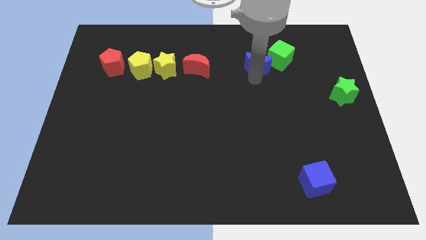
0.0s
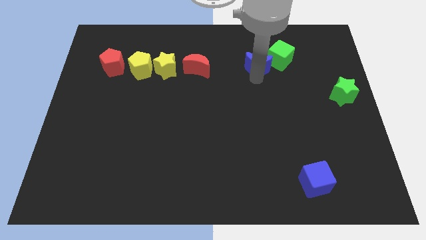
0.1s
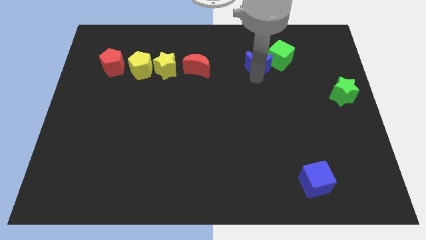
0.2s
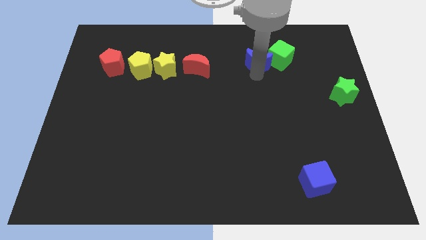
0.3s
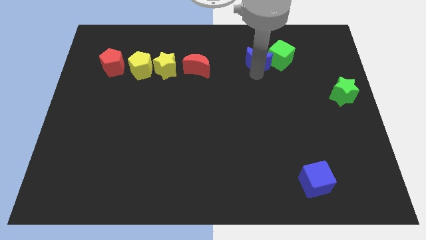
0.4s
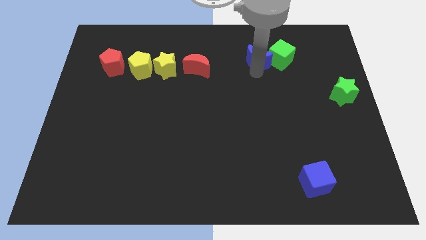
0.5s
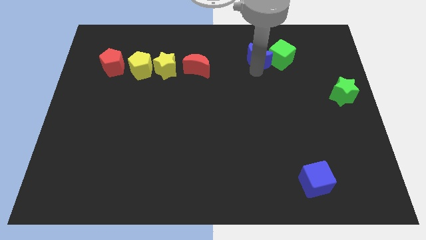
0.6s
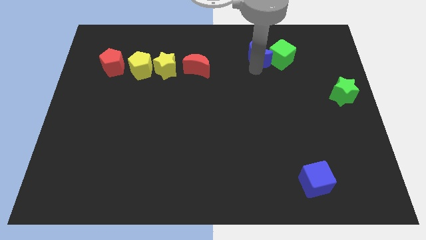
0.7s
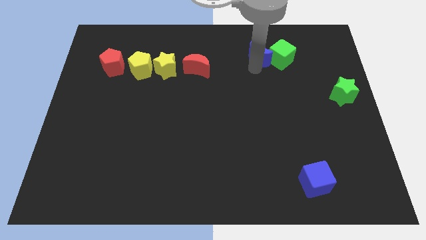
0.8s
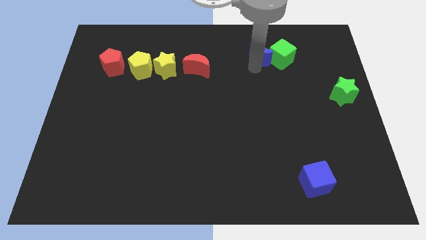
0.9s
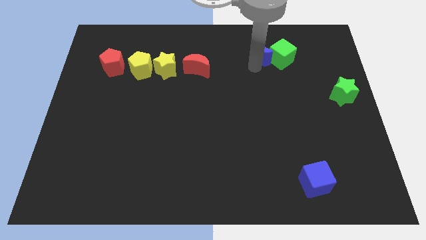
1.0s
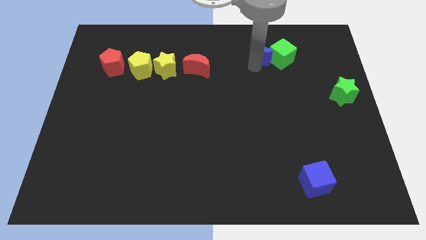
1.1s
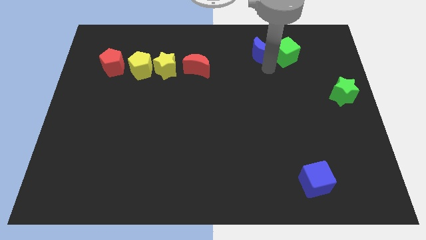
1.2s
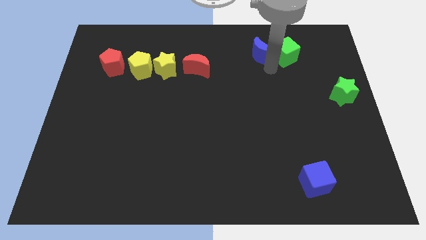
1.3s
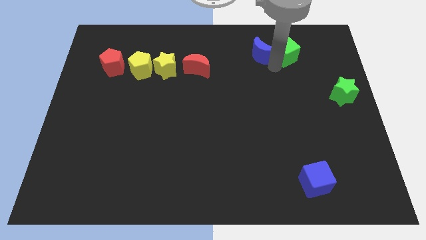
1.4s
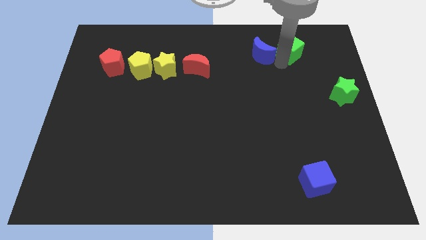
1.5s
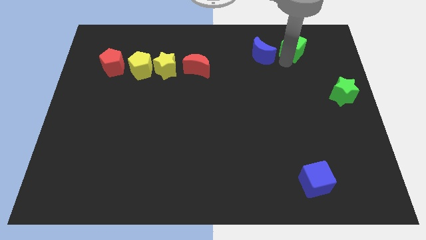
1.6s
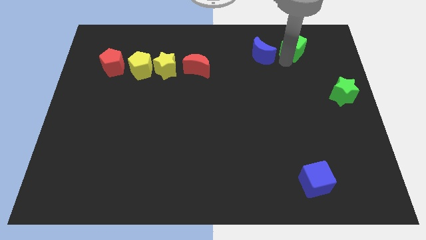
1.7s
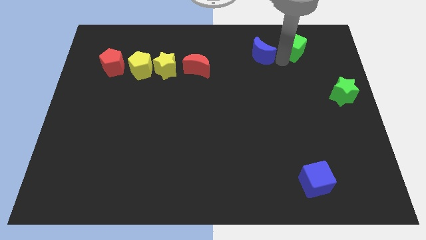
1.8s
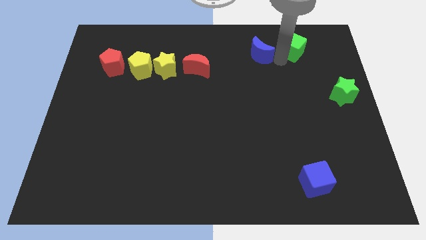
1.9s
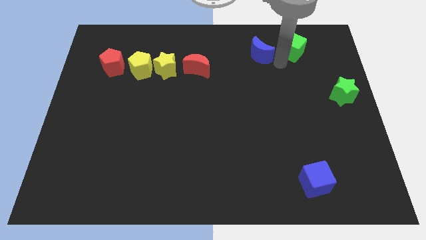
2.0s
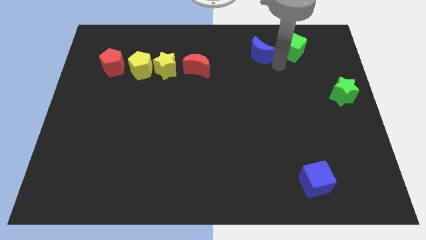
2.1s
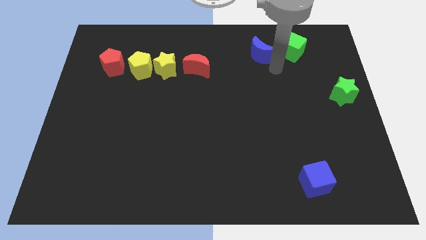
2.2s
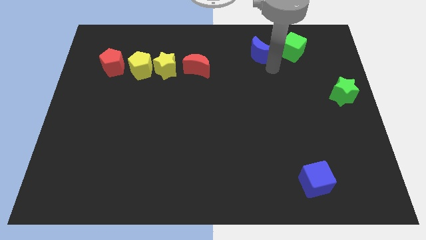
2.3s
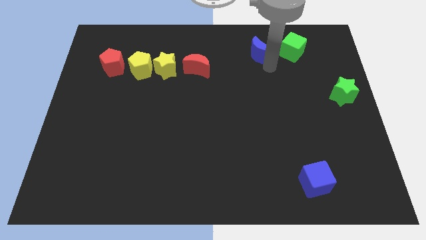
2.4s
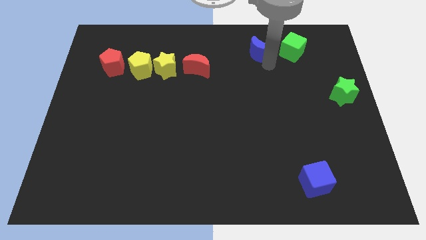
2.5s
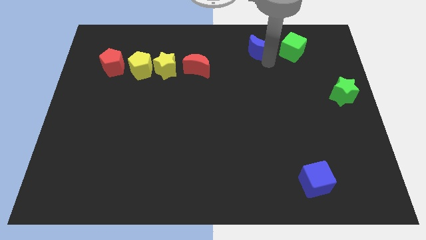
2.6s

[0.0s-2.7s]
separate blue crescent from green cube

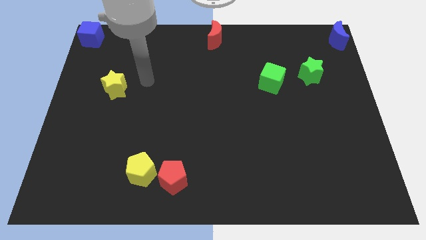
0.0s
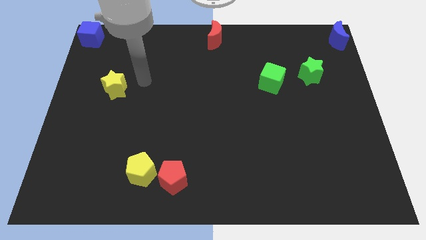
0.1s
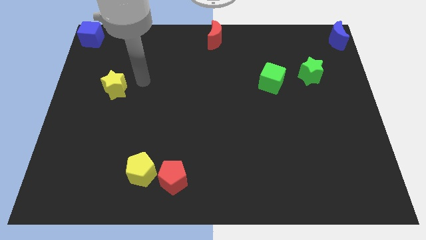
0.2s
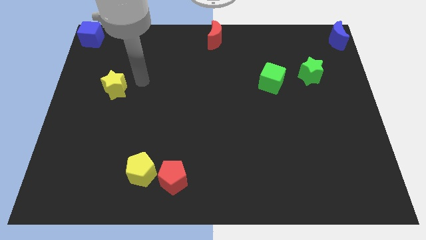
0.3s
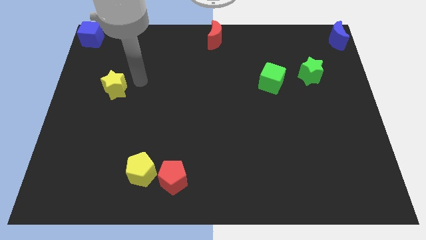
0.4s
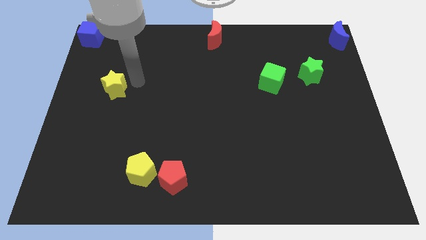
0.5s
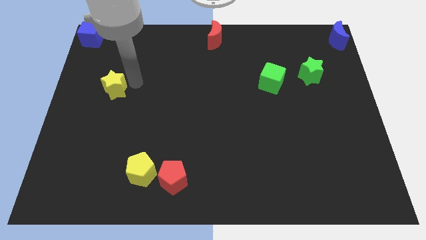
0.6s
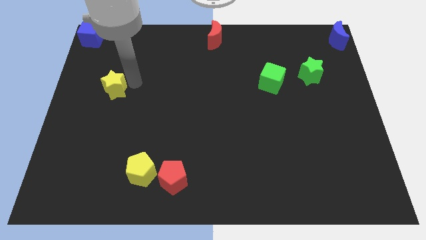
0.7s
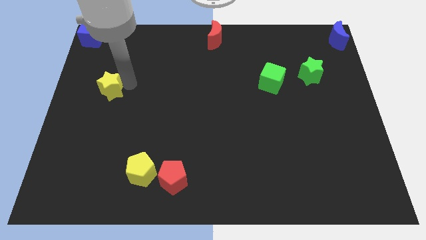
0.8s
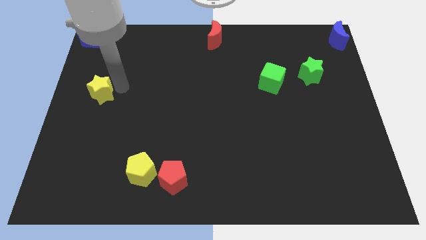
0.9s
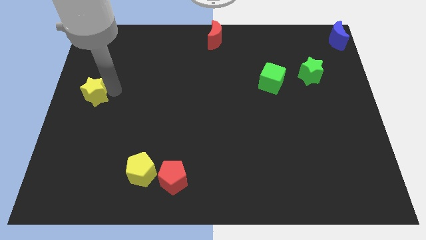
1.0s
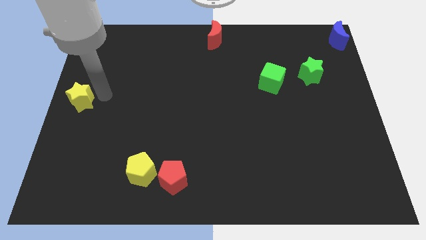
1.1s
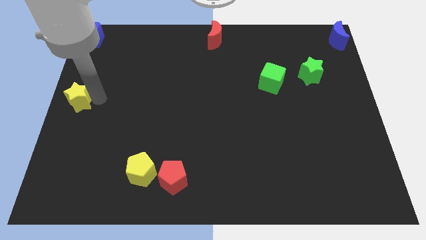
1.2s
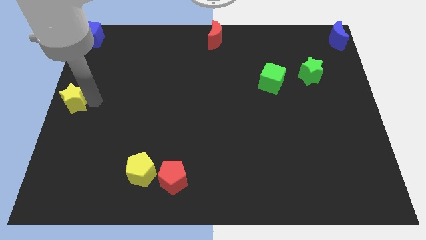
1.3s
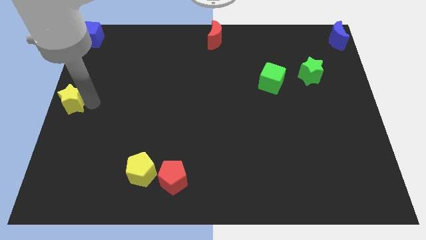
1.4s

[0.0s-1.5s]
place the yellow star to the center left side of the board

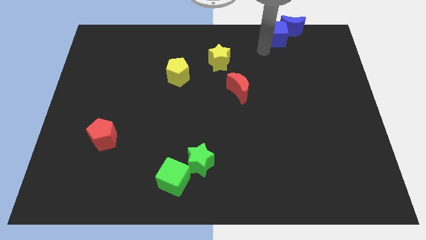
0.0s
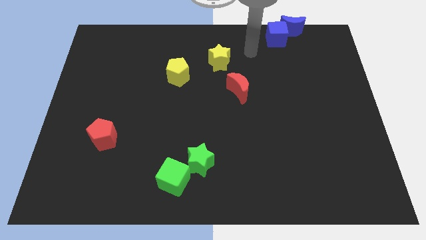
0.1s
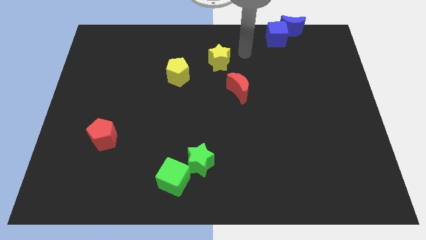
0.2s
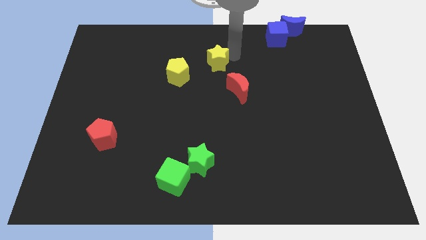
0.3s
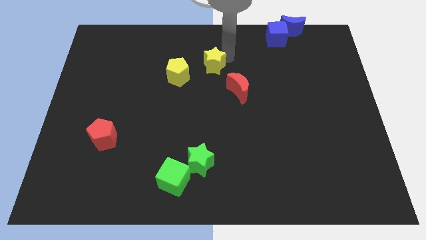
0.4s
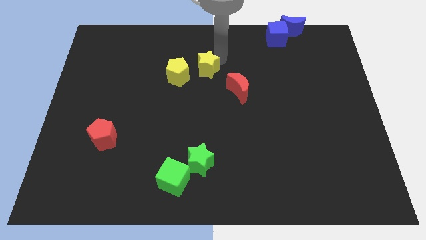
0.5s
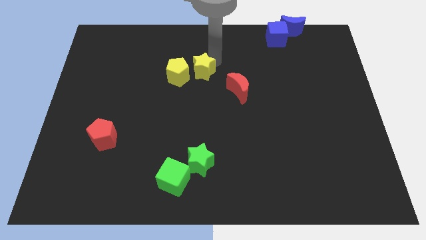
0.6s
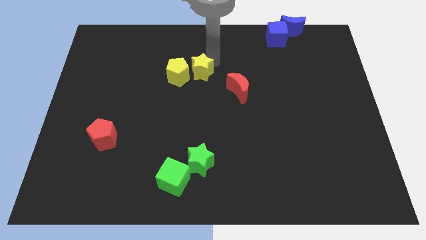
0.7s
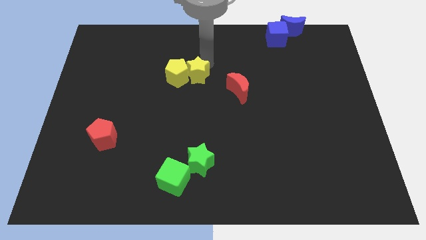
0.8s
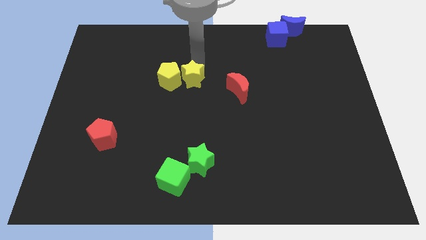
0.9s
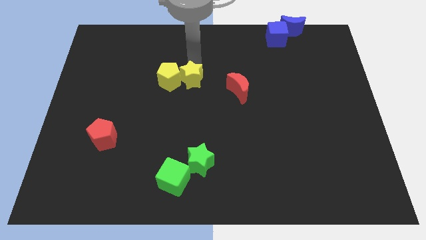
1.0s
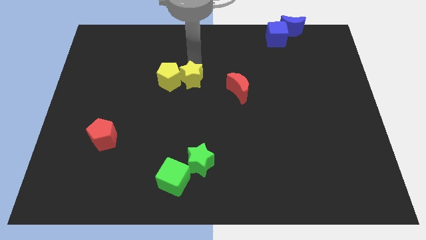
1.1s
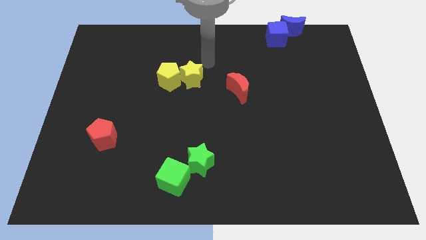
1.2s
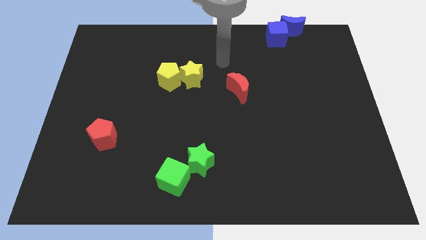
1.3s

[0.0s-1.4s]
move the yellow star to the right of the yellow pentagon

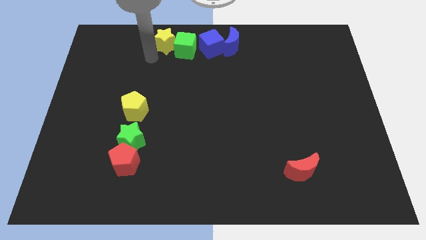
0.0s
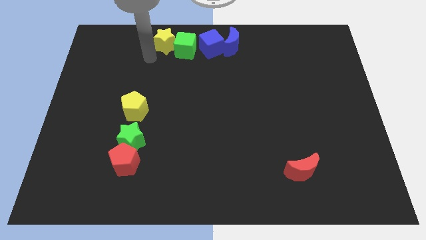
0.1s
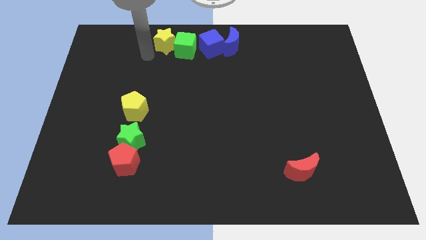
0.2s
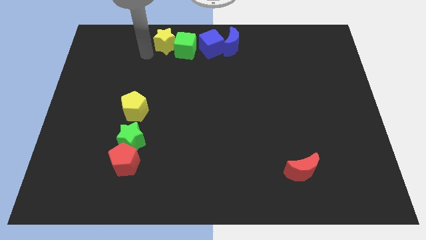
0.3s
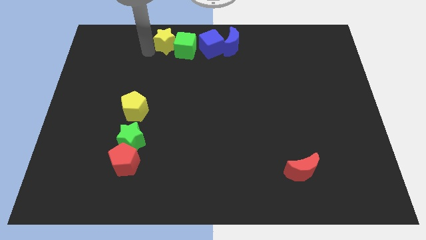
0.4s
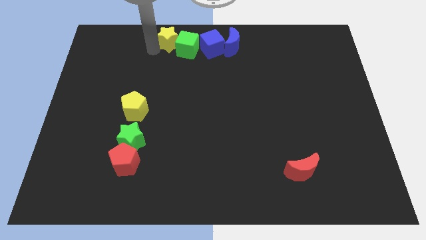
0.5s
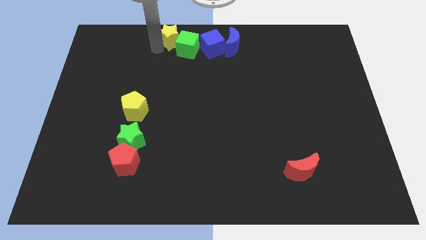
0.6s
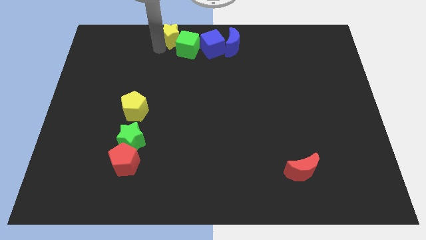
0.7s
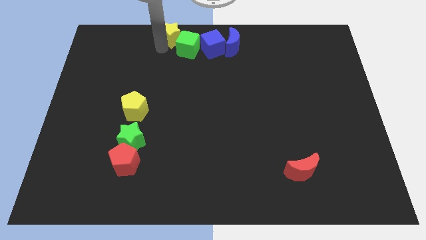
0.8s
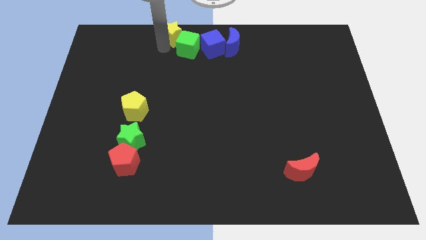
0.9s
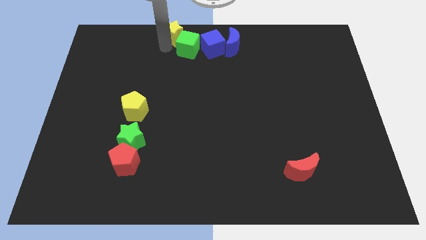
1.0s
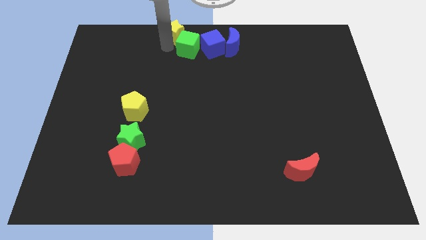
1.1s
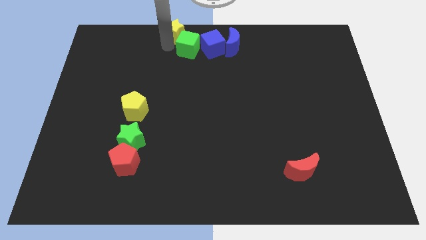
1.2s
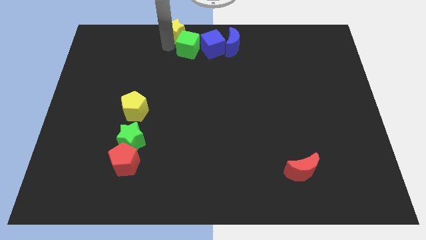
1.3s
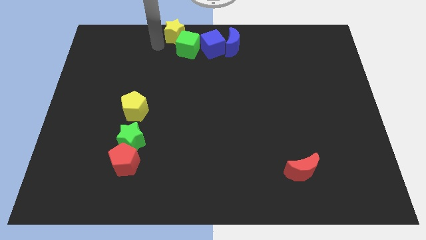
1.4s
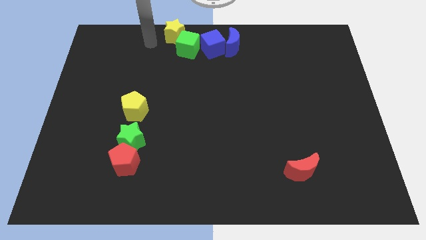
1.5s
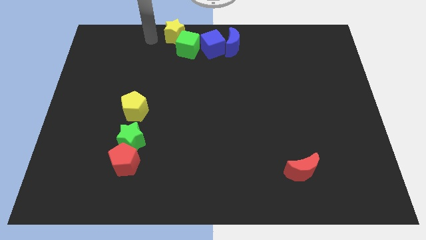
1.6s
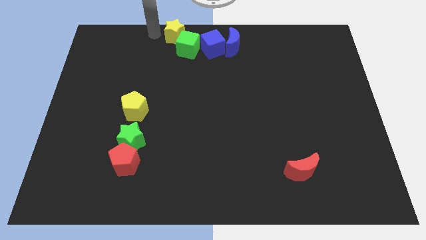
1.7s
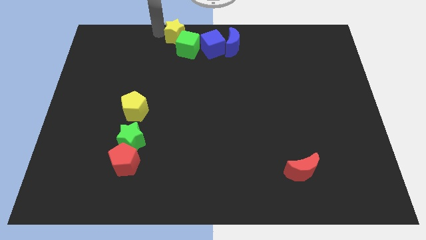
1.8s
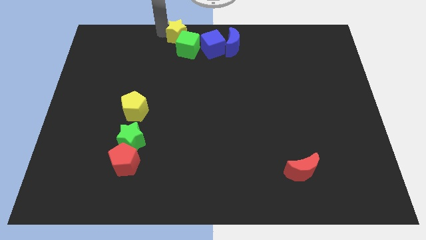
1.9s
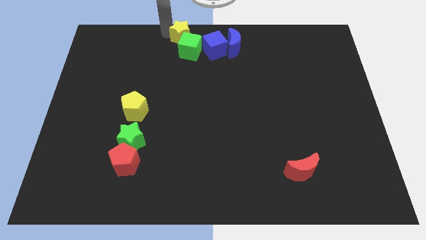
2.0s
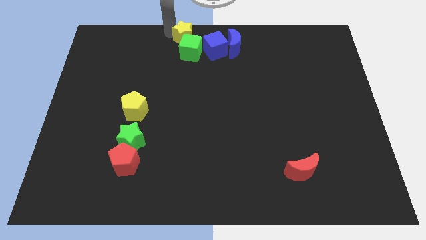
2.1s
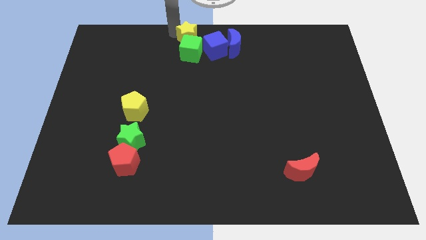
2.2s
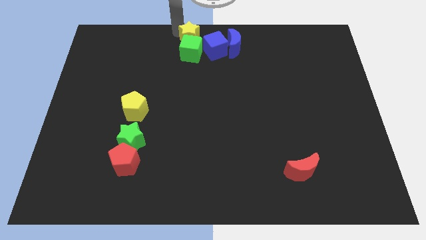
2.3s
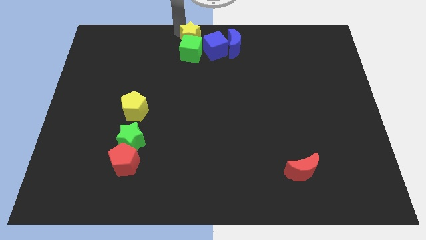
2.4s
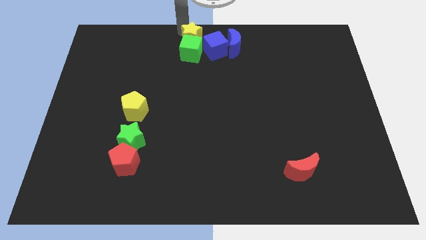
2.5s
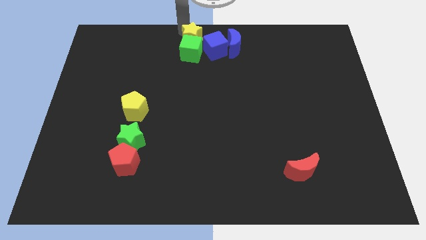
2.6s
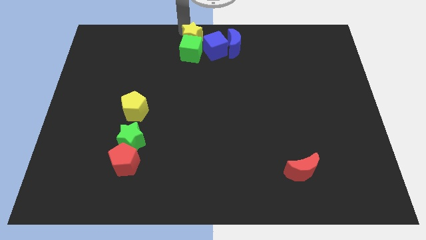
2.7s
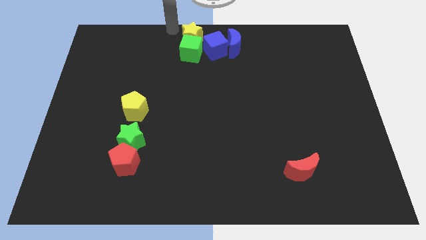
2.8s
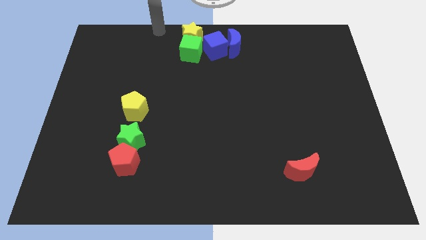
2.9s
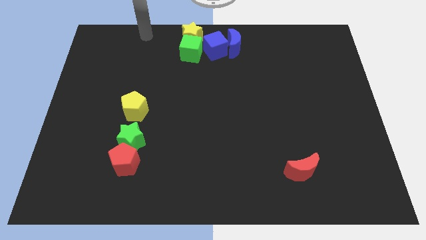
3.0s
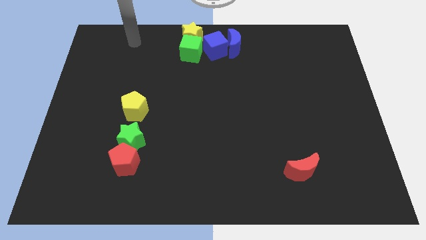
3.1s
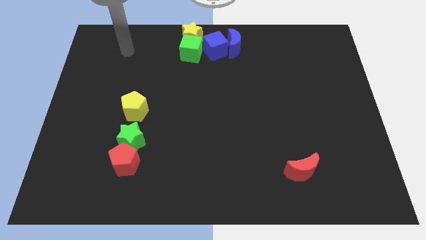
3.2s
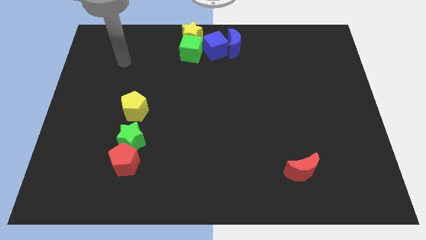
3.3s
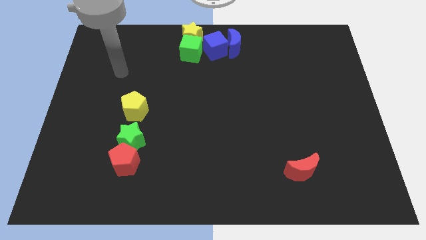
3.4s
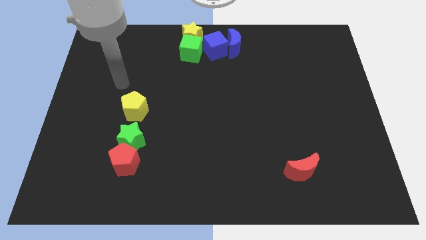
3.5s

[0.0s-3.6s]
move the yellow star top of green square

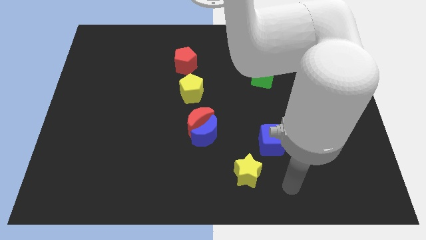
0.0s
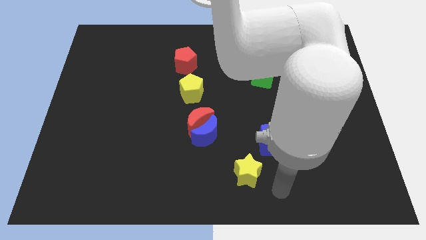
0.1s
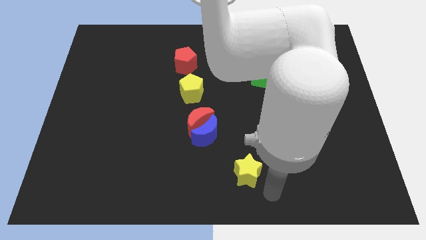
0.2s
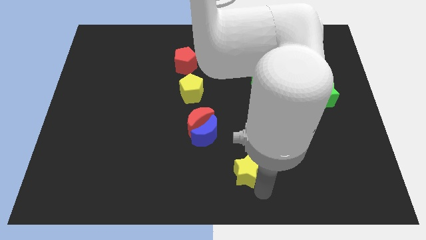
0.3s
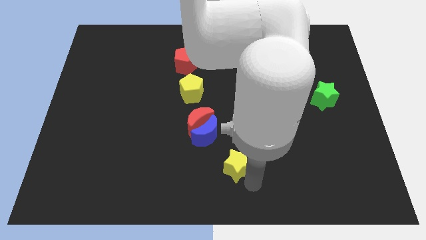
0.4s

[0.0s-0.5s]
touch the yellow star
